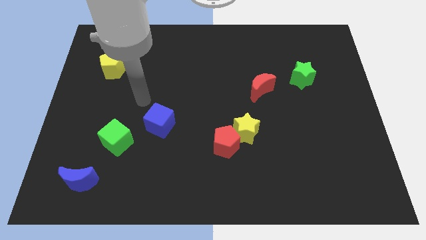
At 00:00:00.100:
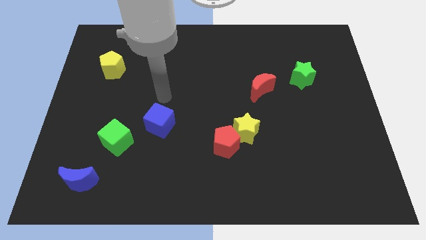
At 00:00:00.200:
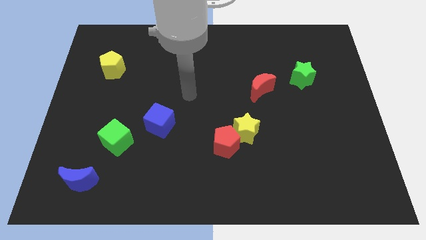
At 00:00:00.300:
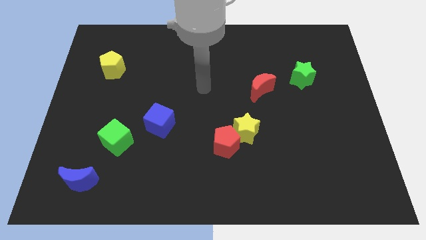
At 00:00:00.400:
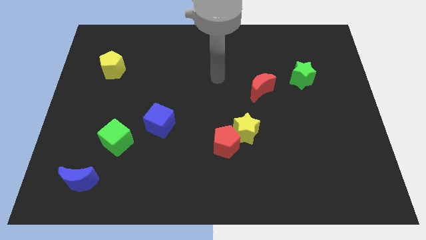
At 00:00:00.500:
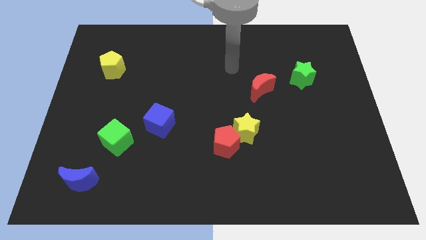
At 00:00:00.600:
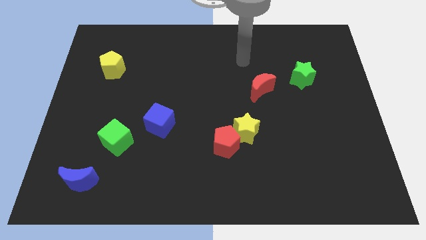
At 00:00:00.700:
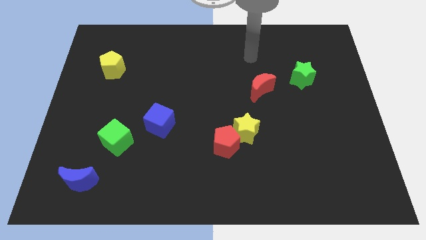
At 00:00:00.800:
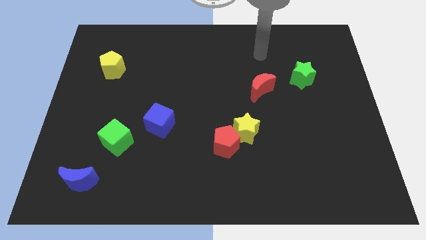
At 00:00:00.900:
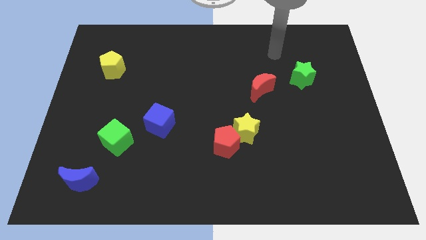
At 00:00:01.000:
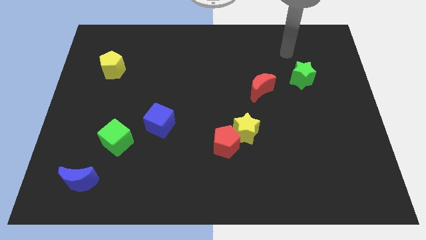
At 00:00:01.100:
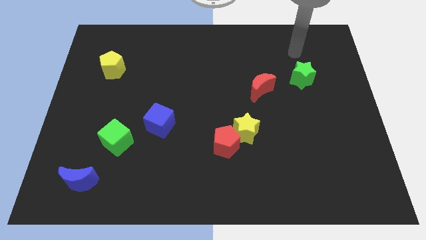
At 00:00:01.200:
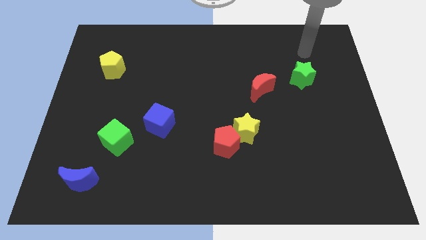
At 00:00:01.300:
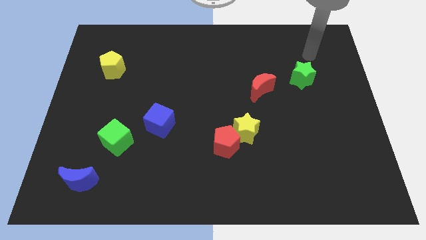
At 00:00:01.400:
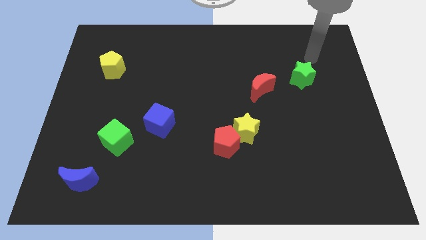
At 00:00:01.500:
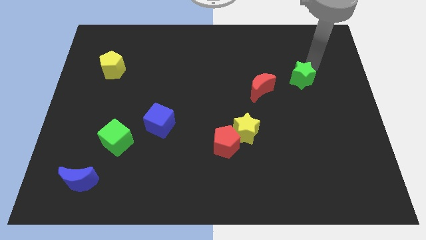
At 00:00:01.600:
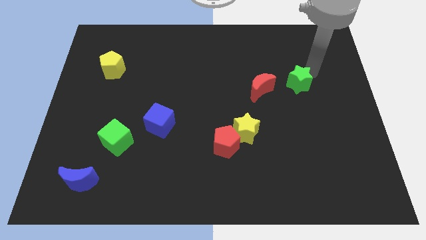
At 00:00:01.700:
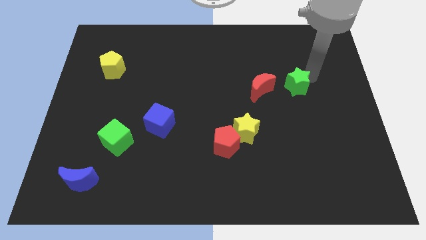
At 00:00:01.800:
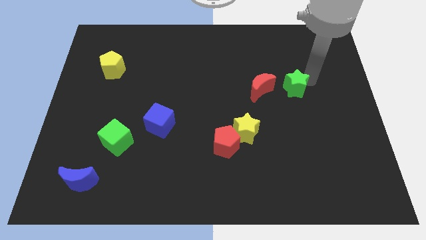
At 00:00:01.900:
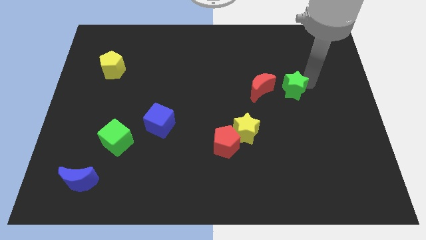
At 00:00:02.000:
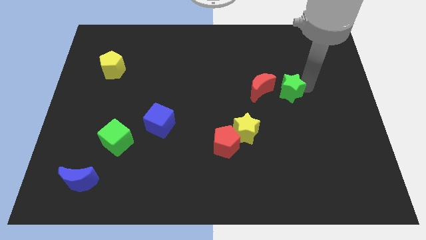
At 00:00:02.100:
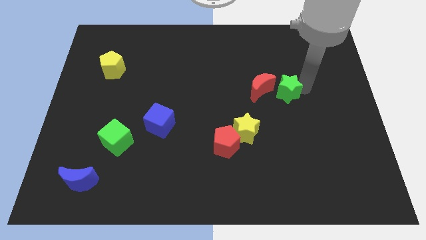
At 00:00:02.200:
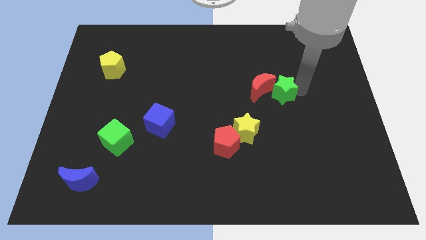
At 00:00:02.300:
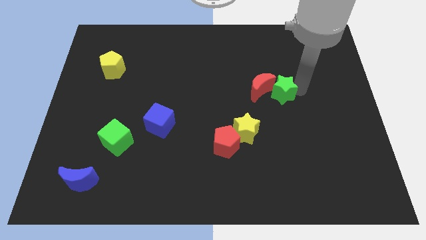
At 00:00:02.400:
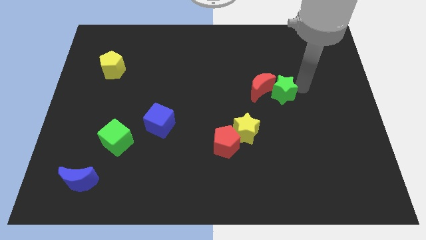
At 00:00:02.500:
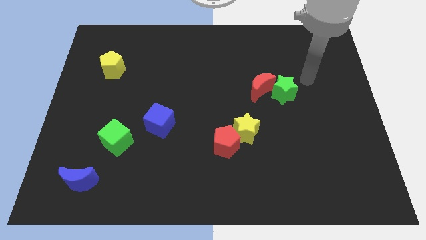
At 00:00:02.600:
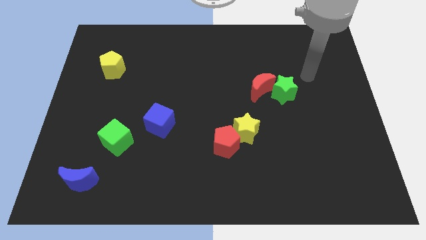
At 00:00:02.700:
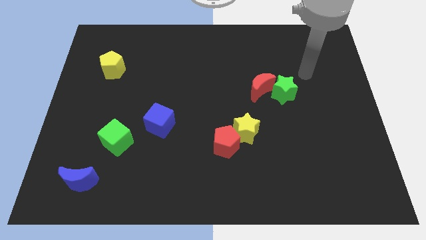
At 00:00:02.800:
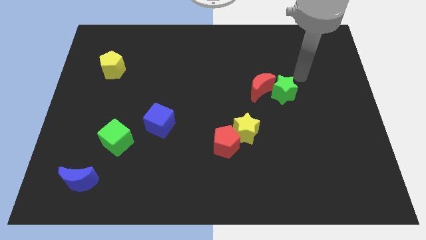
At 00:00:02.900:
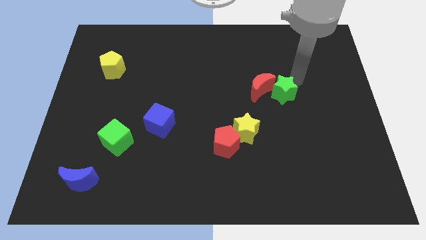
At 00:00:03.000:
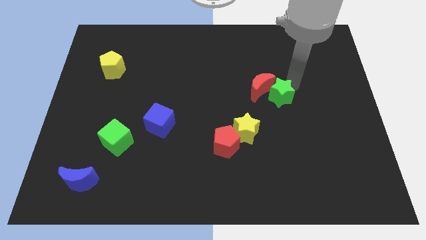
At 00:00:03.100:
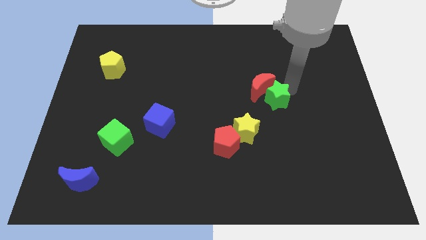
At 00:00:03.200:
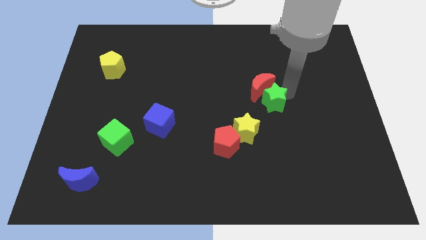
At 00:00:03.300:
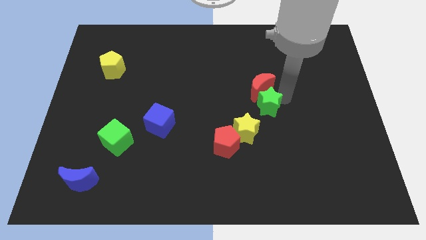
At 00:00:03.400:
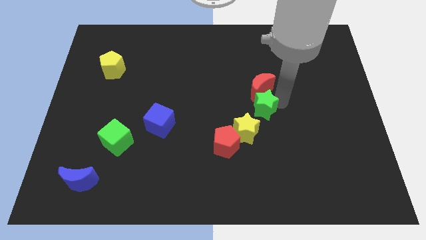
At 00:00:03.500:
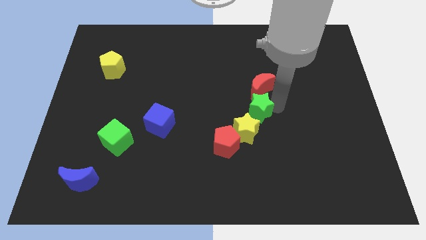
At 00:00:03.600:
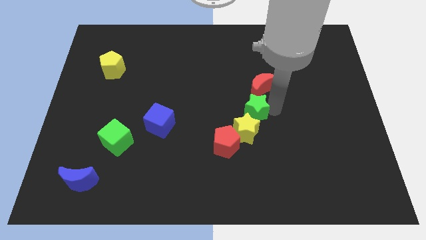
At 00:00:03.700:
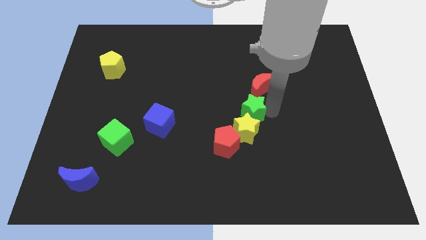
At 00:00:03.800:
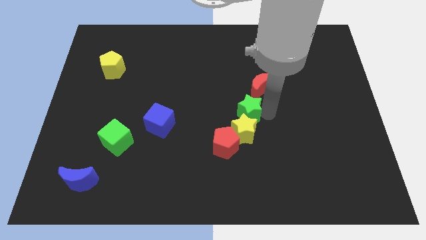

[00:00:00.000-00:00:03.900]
slide the green star to the yellow star

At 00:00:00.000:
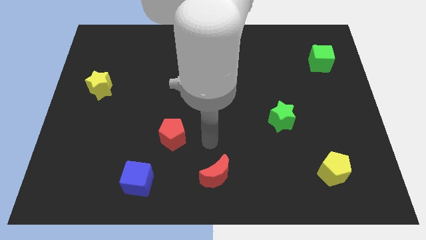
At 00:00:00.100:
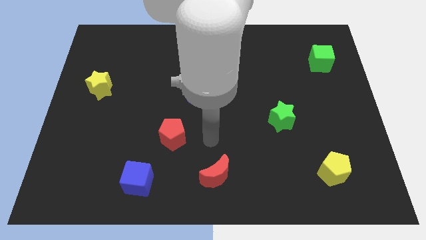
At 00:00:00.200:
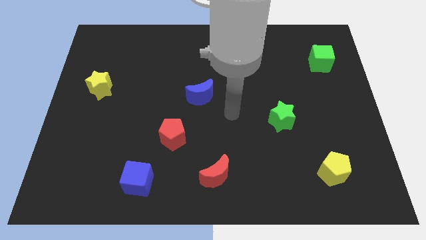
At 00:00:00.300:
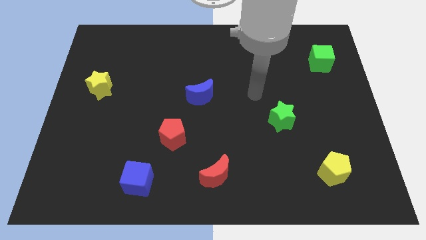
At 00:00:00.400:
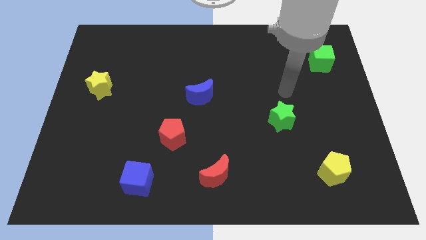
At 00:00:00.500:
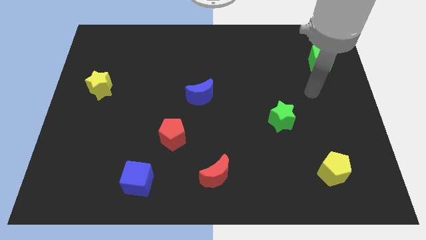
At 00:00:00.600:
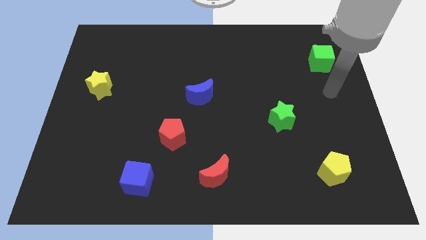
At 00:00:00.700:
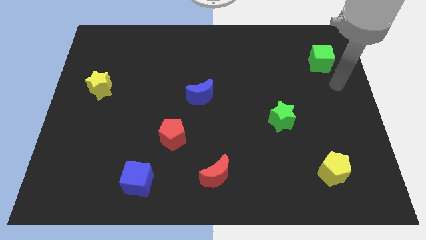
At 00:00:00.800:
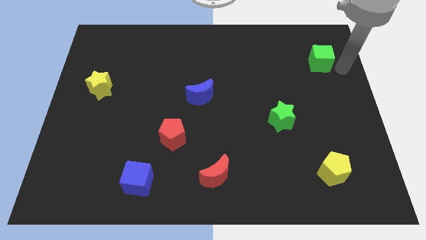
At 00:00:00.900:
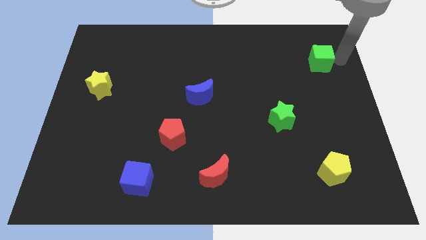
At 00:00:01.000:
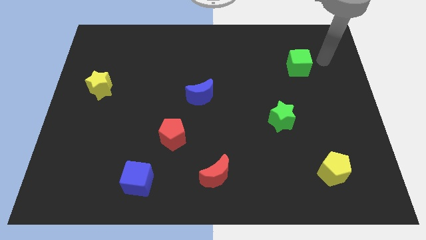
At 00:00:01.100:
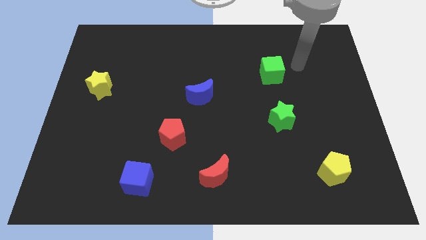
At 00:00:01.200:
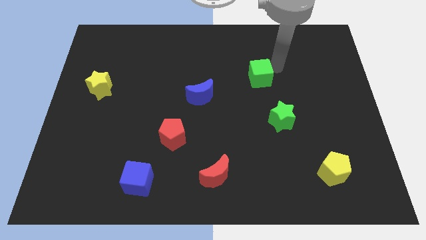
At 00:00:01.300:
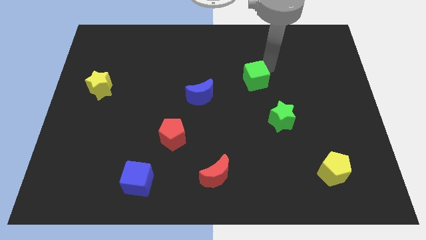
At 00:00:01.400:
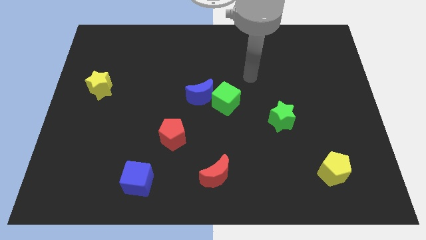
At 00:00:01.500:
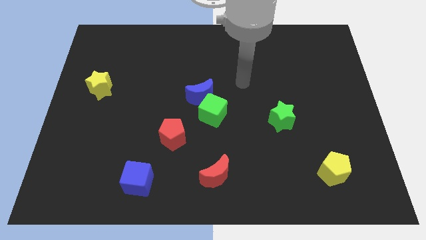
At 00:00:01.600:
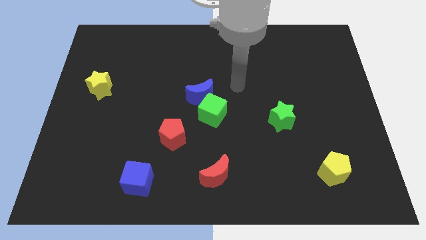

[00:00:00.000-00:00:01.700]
move the green cube next to the blue moon

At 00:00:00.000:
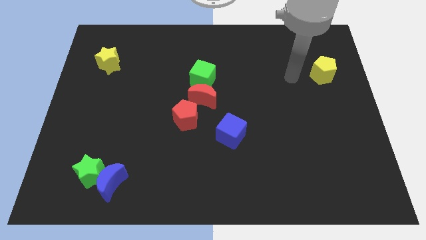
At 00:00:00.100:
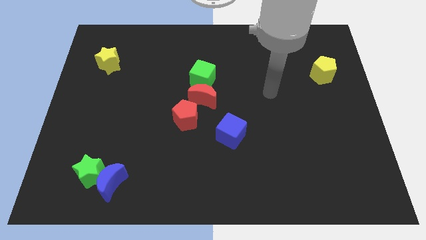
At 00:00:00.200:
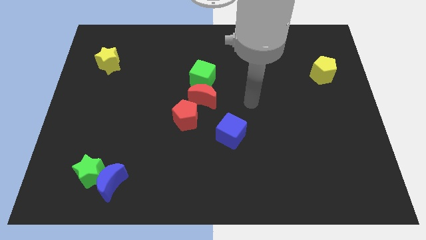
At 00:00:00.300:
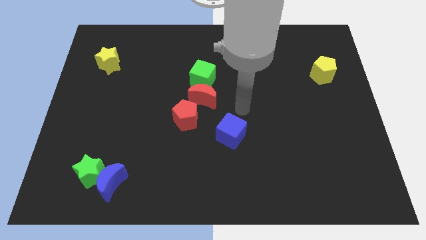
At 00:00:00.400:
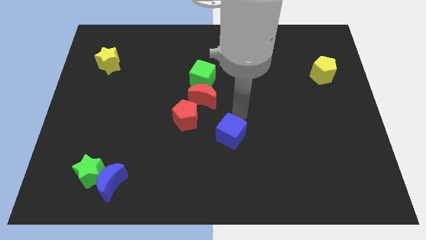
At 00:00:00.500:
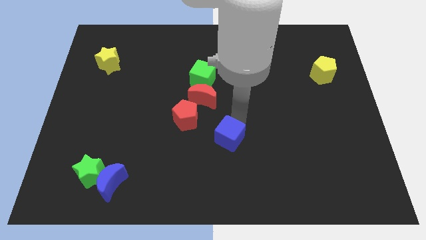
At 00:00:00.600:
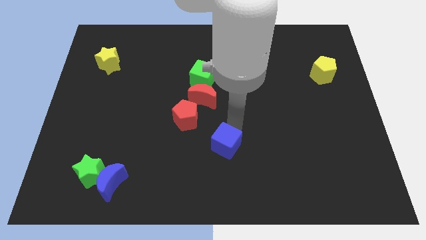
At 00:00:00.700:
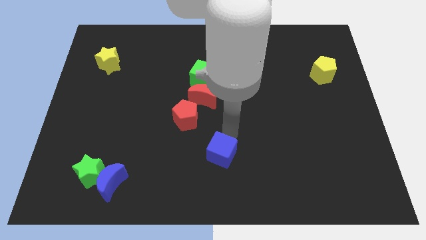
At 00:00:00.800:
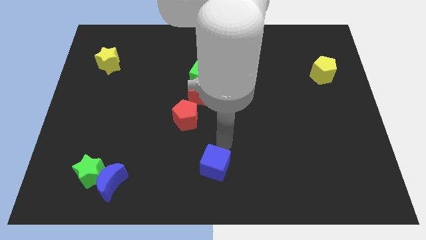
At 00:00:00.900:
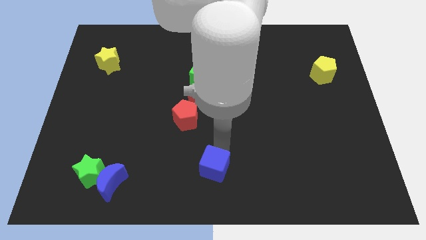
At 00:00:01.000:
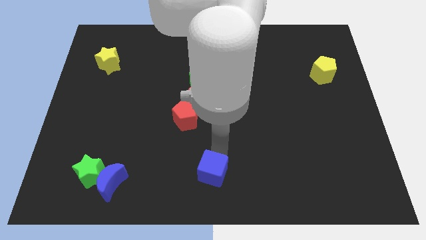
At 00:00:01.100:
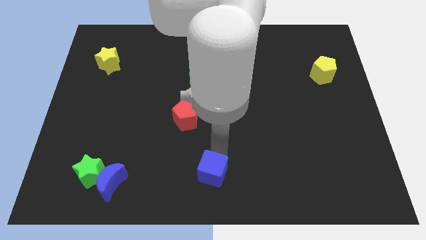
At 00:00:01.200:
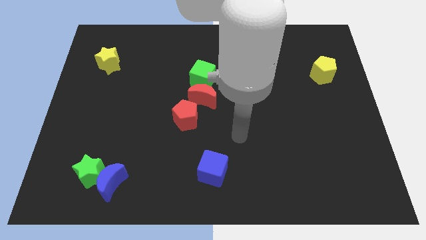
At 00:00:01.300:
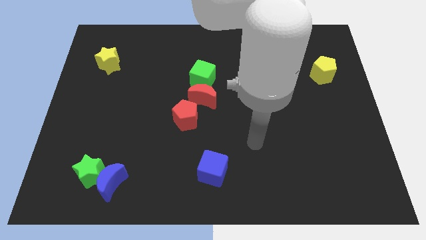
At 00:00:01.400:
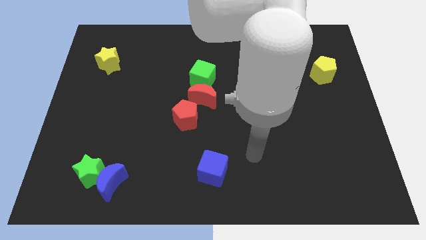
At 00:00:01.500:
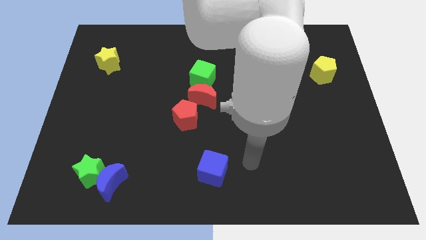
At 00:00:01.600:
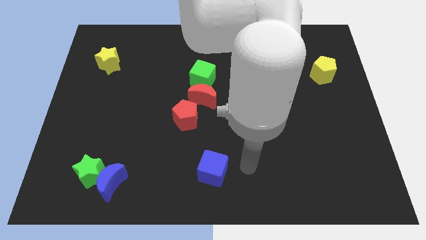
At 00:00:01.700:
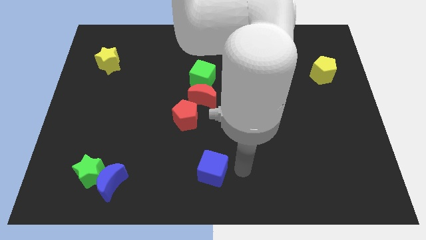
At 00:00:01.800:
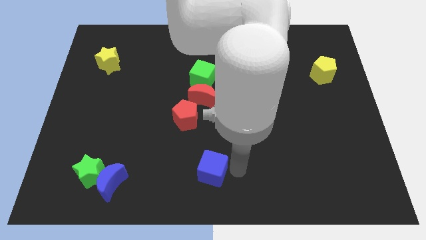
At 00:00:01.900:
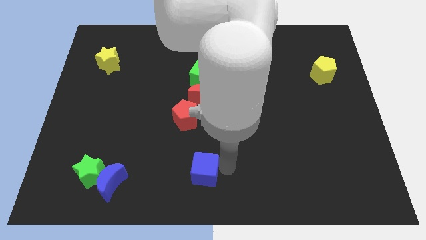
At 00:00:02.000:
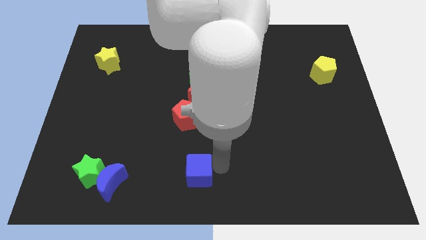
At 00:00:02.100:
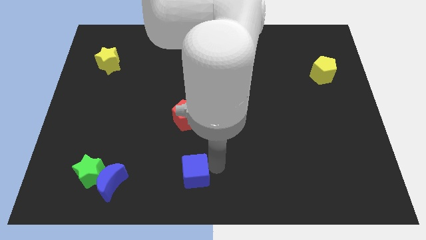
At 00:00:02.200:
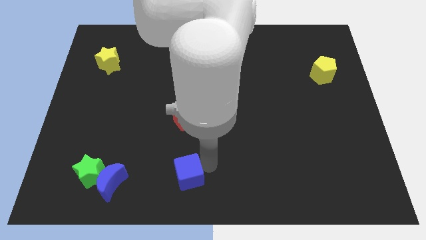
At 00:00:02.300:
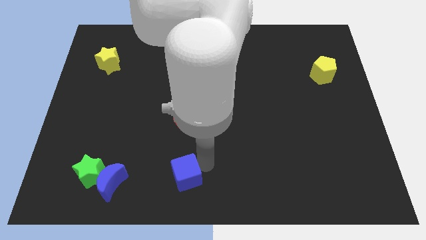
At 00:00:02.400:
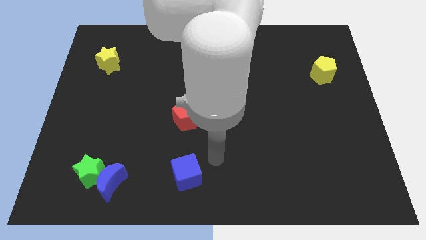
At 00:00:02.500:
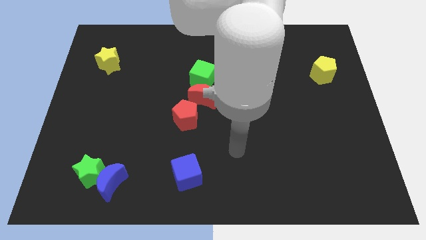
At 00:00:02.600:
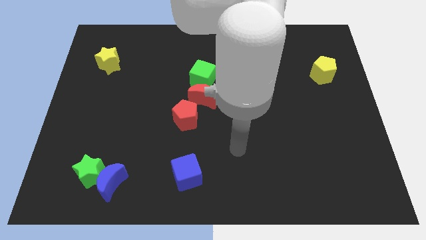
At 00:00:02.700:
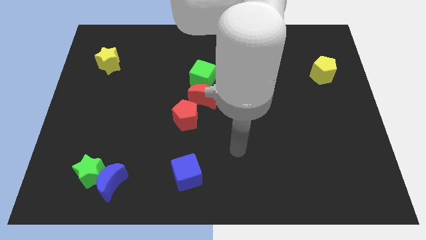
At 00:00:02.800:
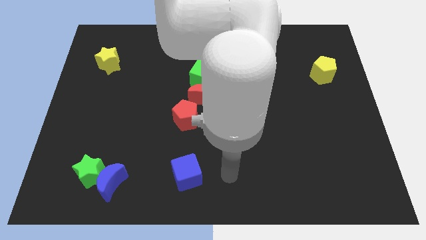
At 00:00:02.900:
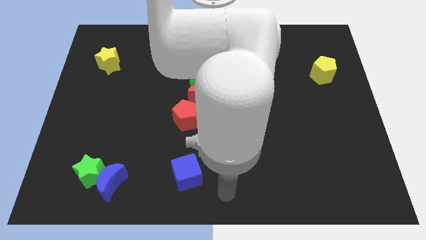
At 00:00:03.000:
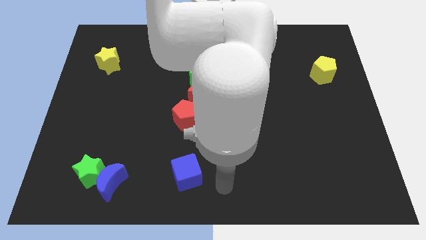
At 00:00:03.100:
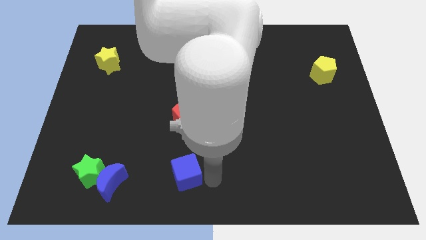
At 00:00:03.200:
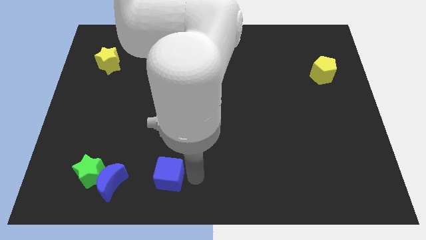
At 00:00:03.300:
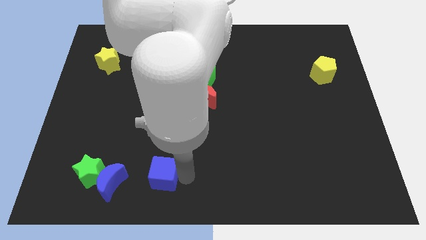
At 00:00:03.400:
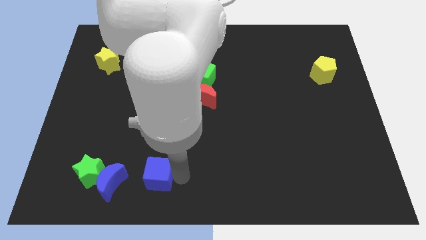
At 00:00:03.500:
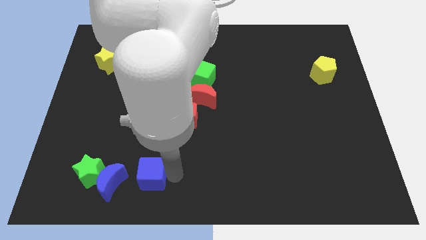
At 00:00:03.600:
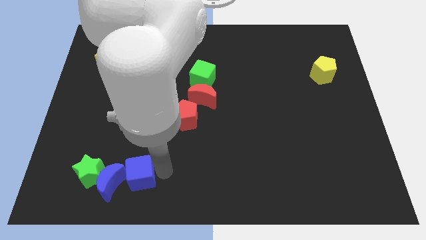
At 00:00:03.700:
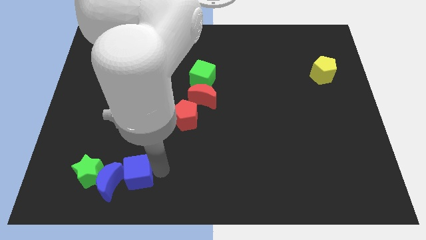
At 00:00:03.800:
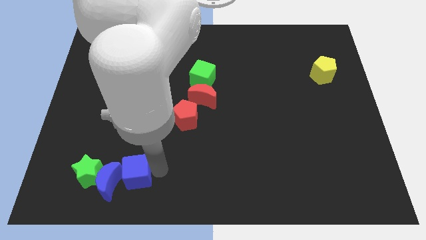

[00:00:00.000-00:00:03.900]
slide the blue cube to the blue moon
